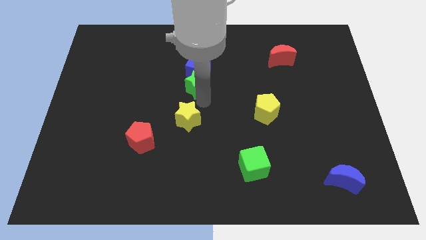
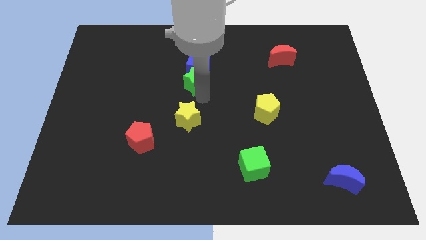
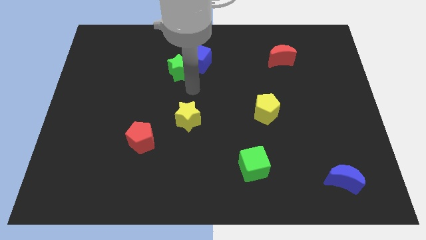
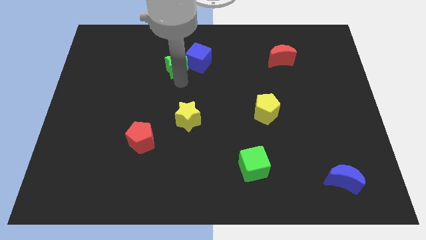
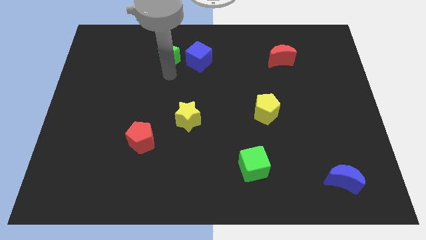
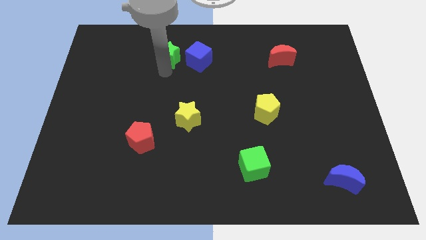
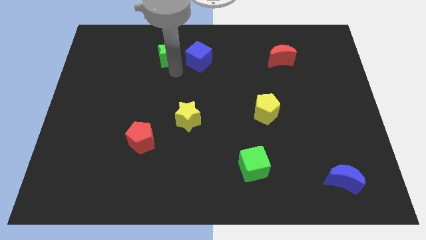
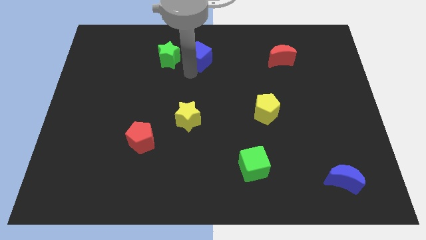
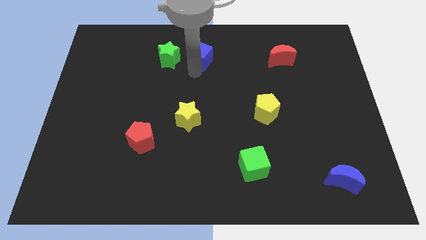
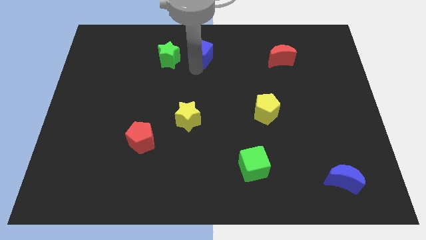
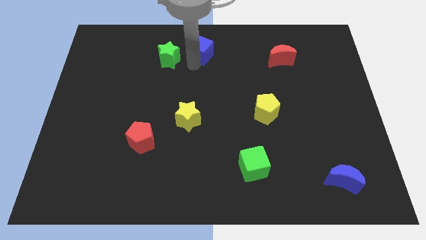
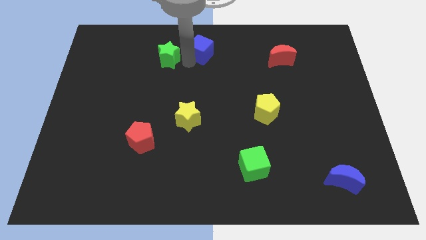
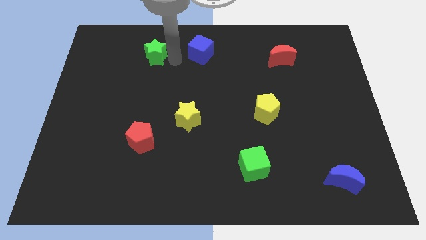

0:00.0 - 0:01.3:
separate green star from blue cube

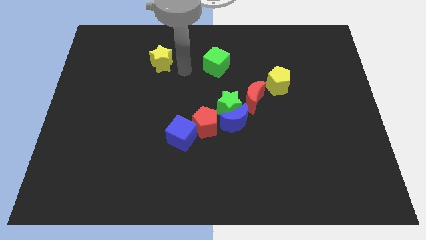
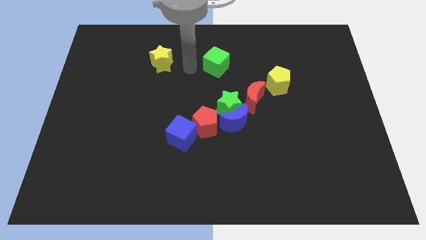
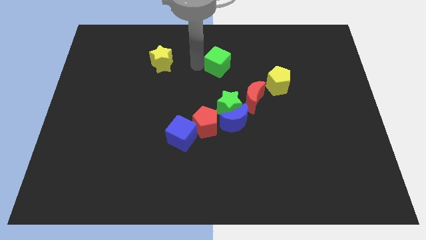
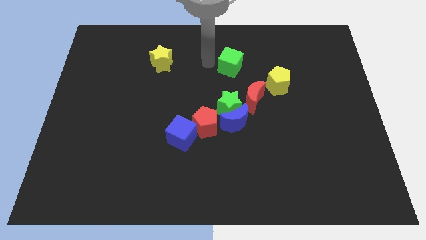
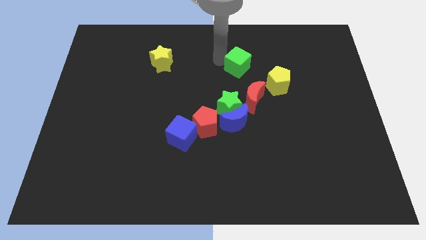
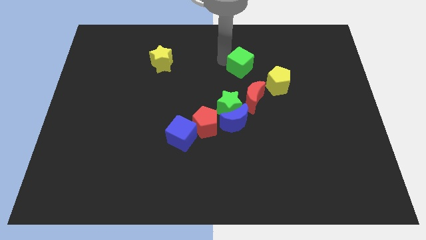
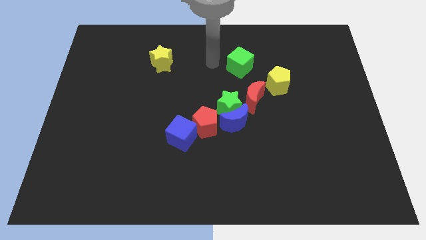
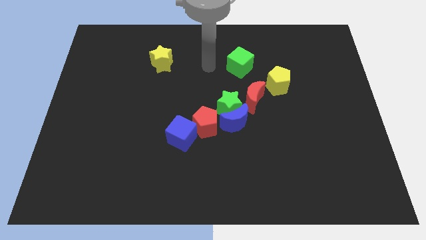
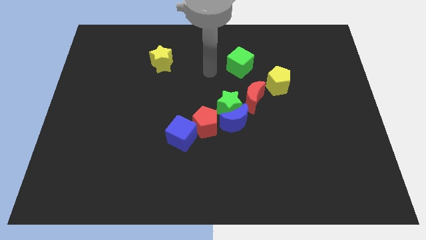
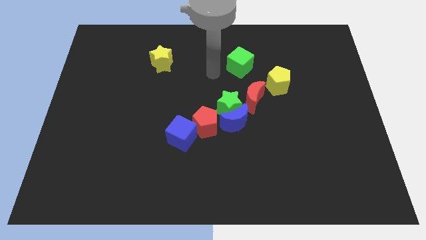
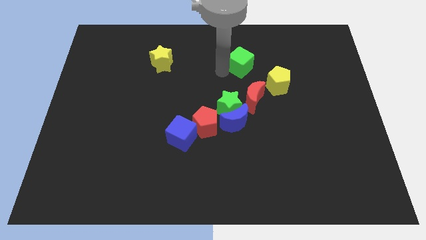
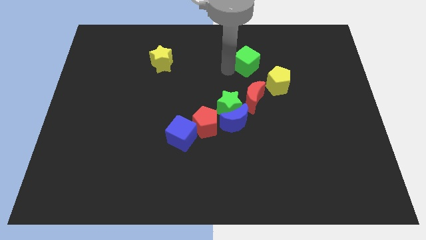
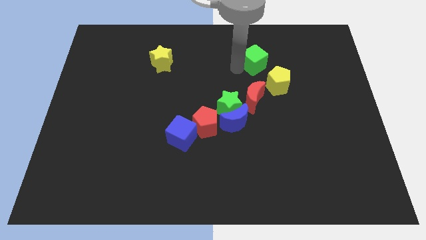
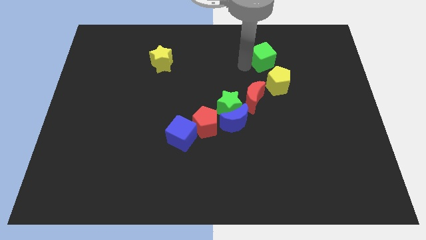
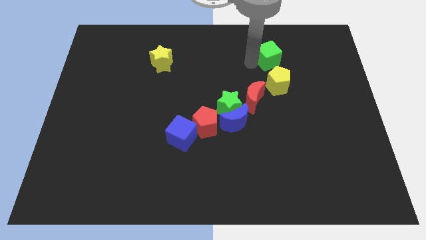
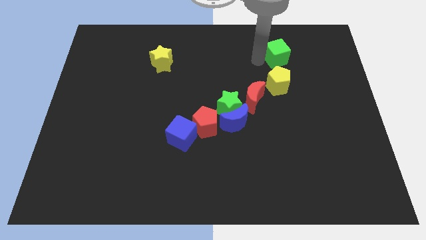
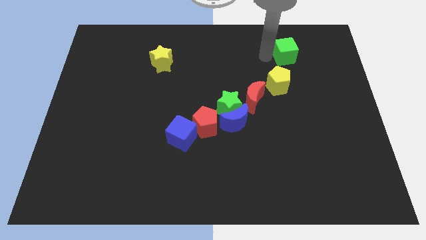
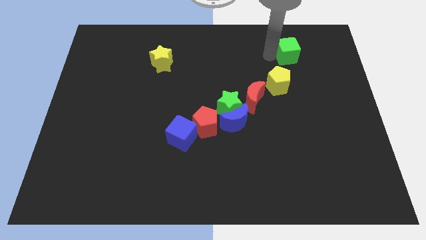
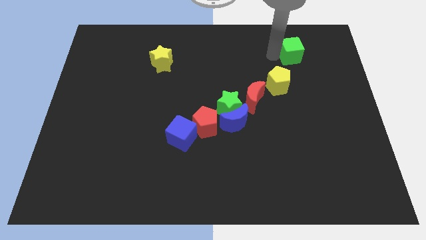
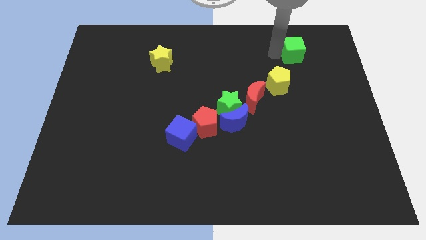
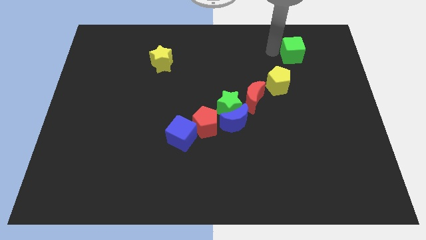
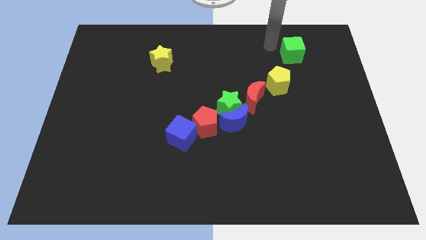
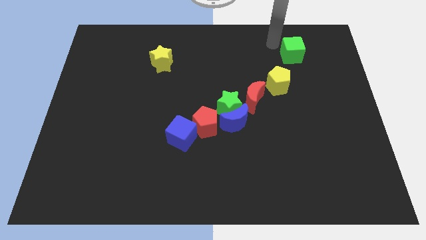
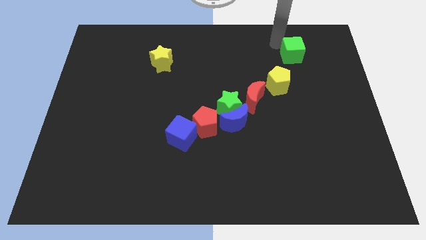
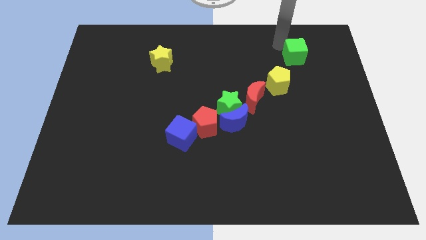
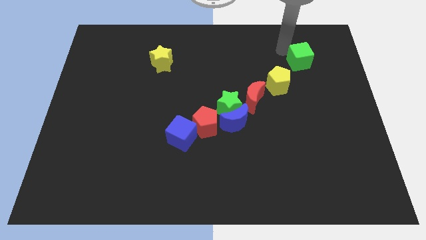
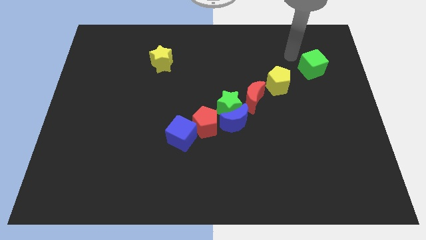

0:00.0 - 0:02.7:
put the green cube diagonally to yellow pentagon

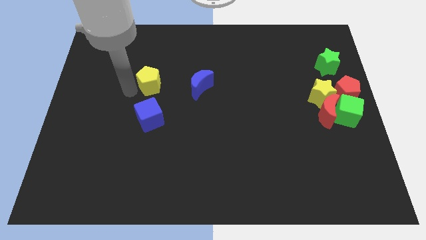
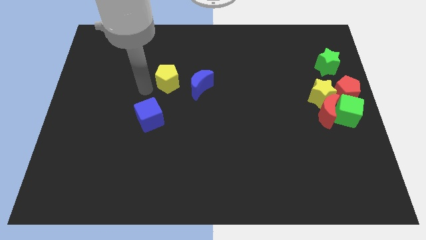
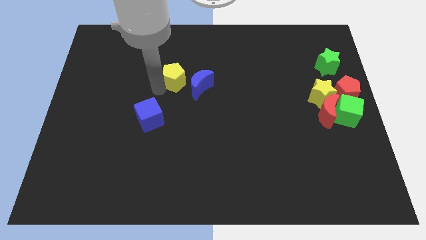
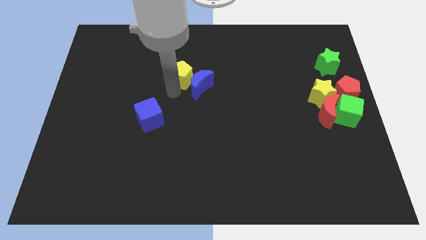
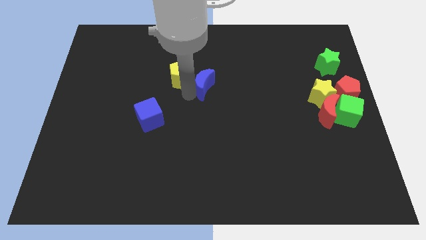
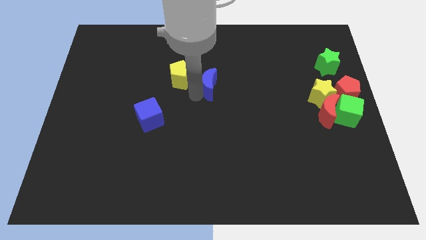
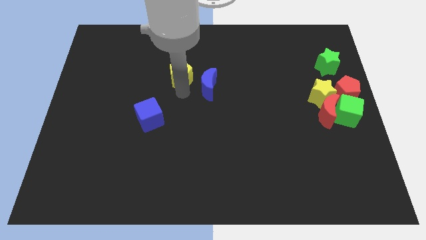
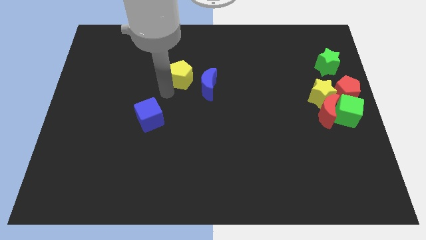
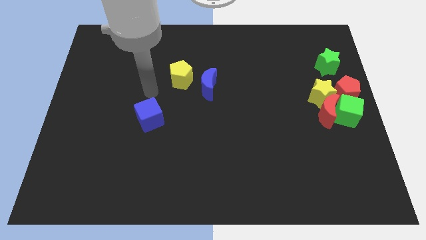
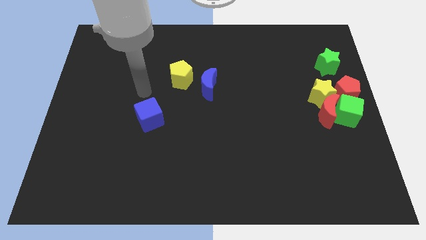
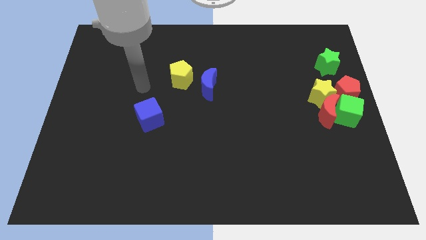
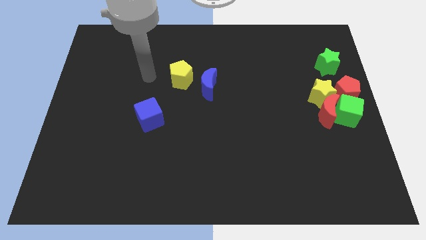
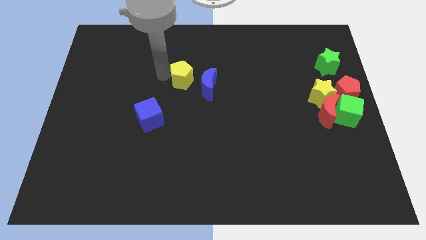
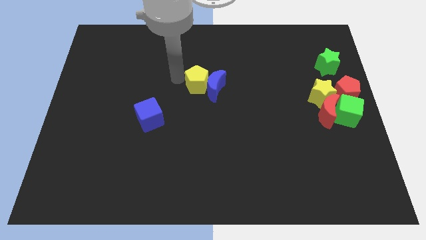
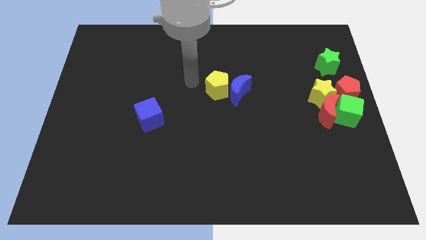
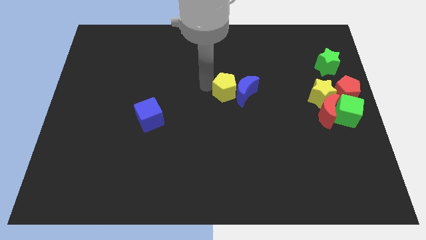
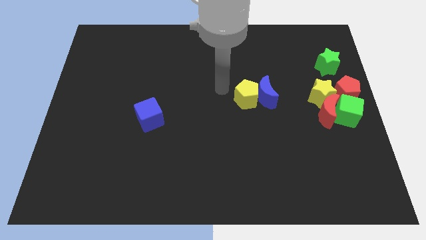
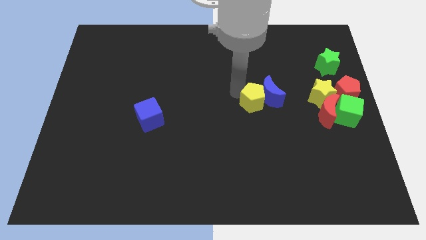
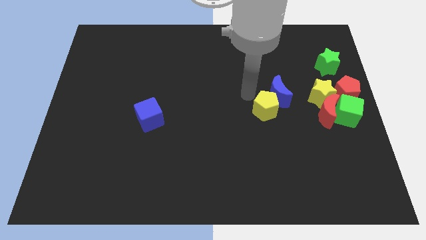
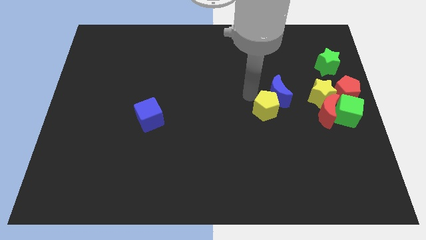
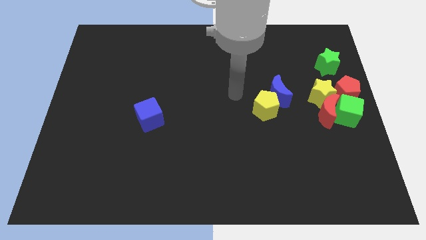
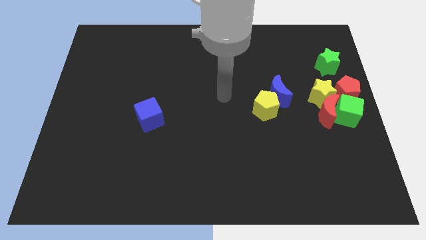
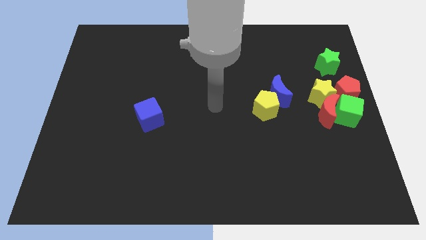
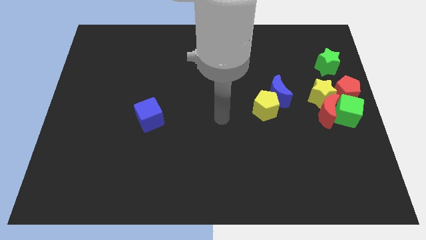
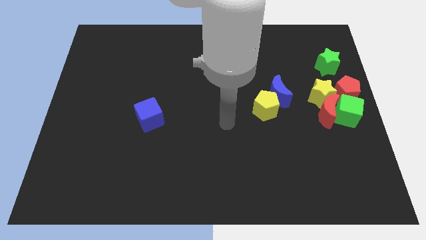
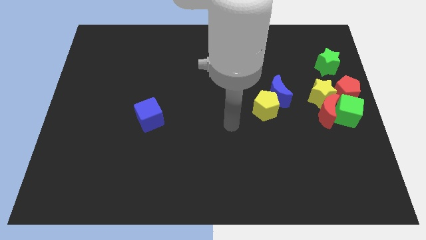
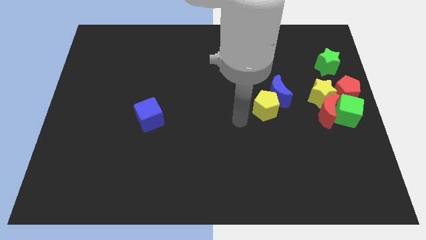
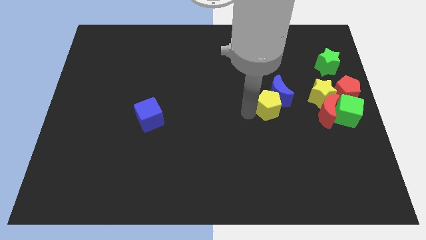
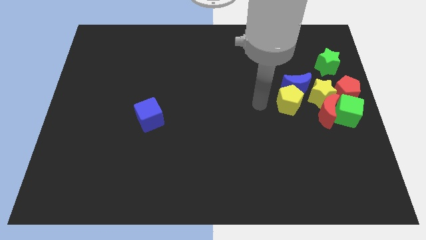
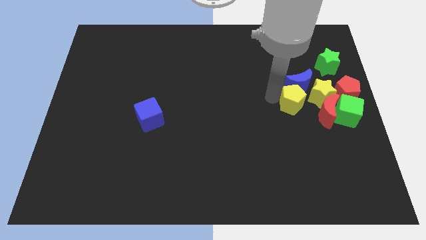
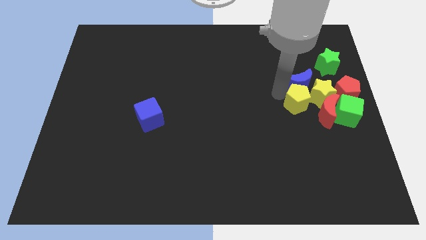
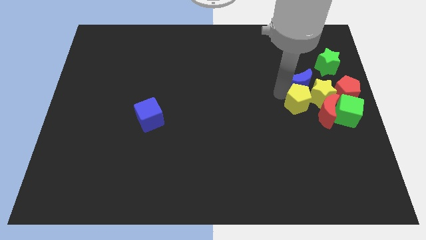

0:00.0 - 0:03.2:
move the yellow pentagon along with blue crescent right to the yellow star and red crescent

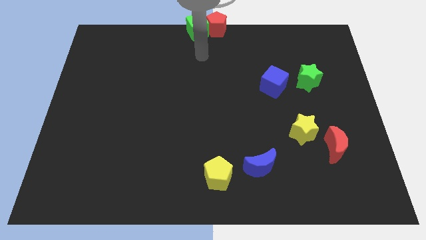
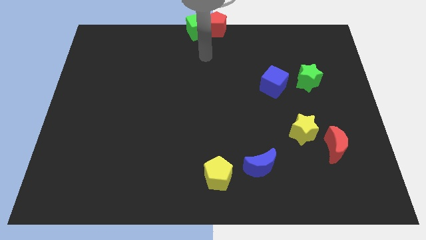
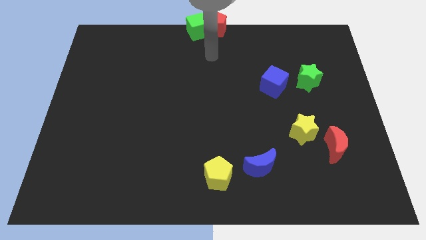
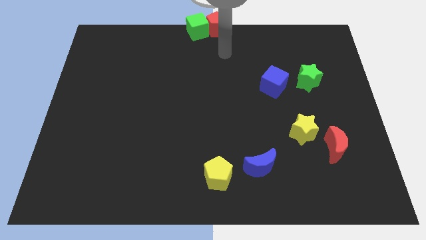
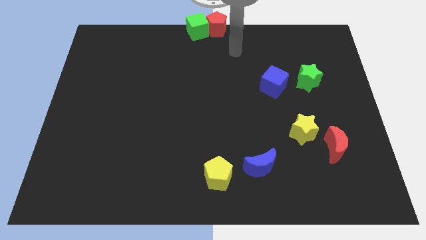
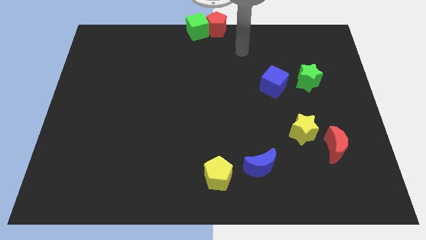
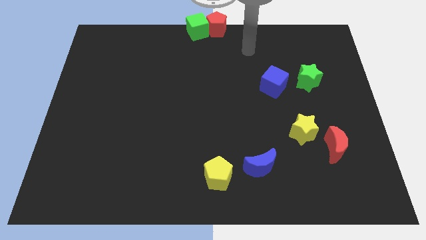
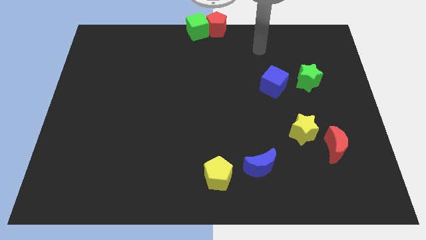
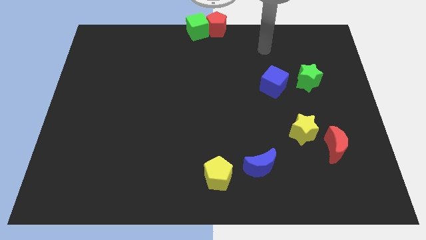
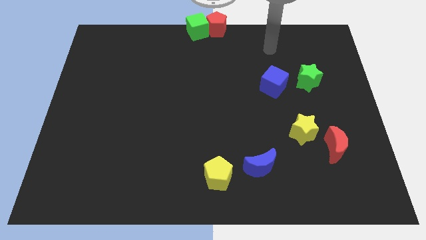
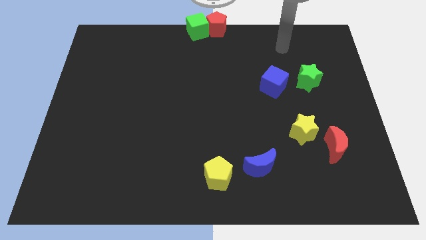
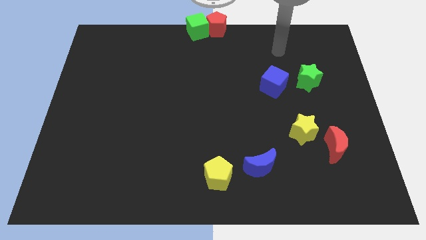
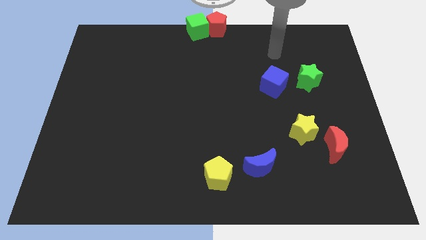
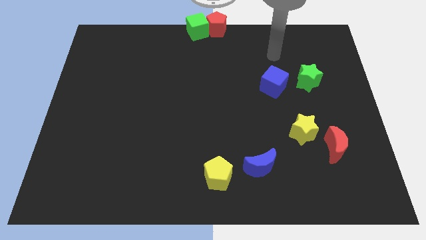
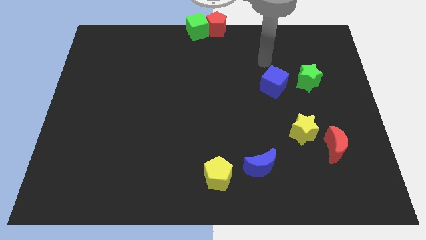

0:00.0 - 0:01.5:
point your arm at the top of the blue cube

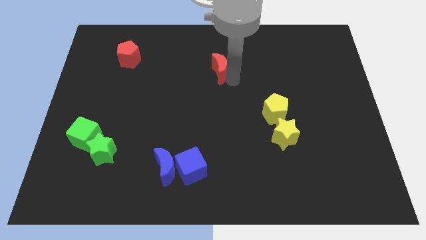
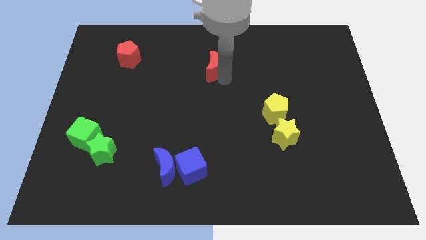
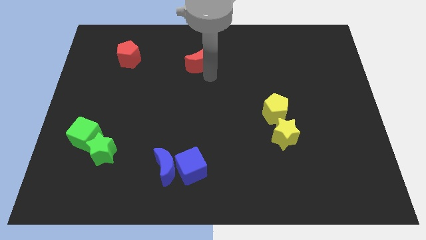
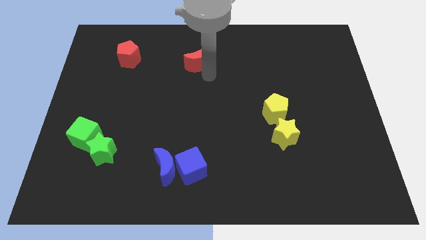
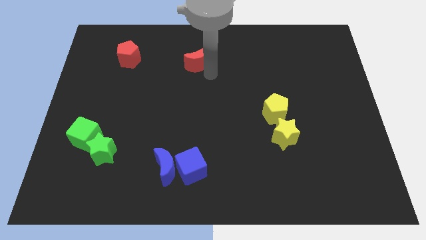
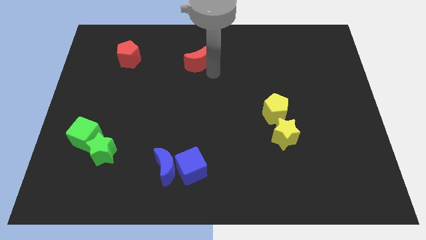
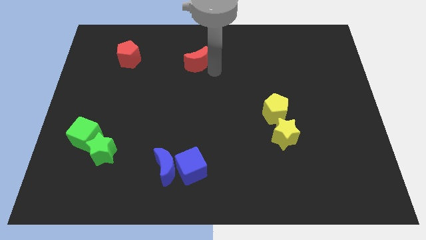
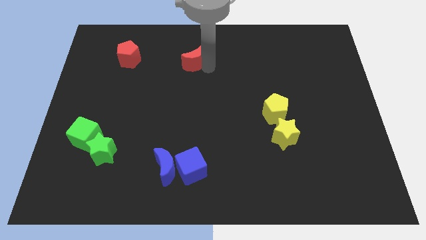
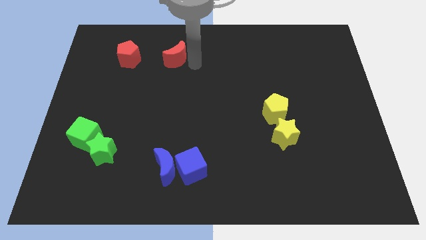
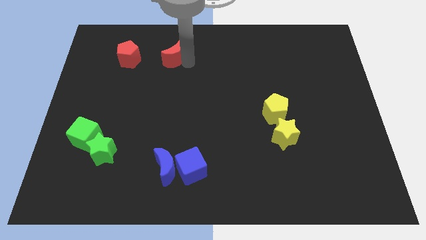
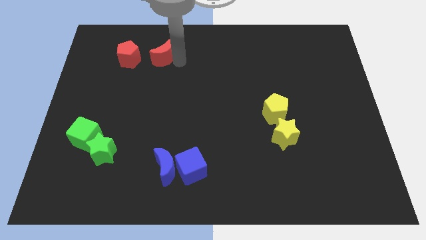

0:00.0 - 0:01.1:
push red moon towards red pentagon
